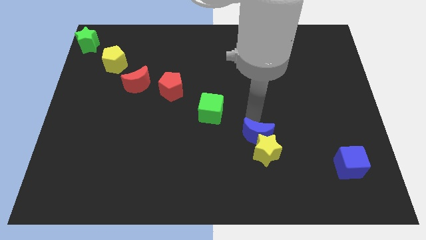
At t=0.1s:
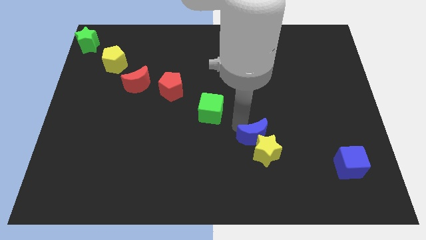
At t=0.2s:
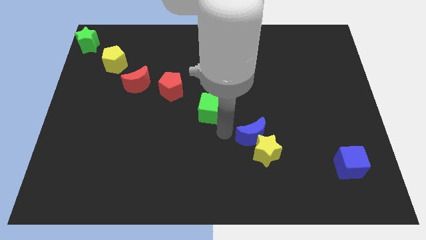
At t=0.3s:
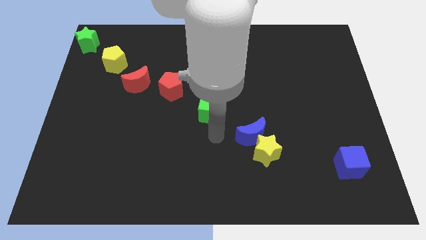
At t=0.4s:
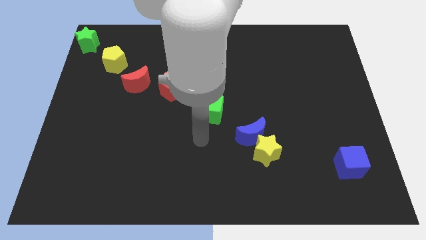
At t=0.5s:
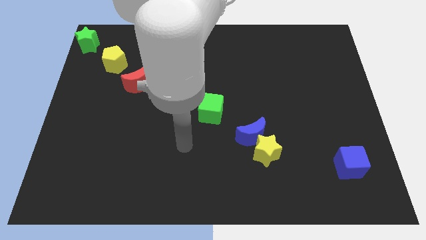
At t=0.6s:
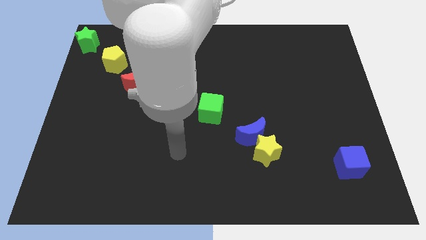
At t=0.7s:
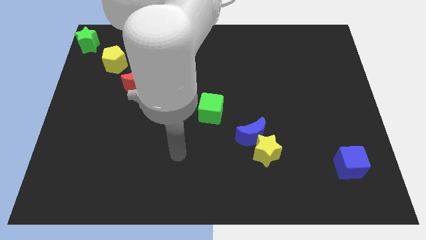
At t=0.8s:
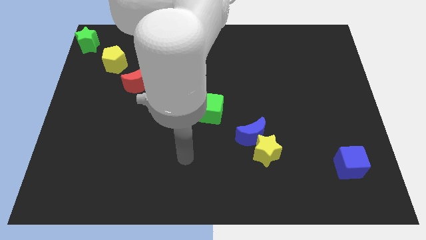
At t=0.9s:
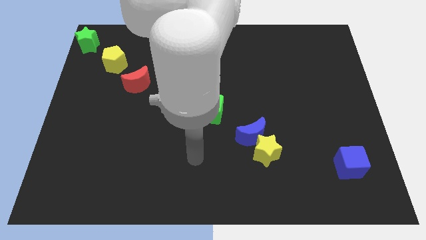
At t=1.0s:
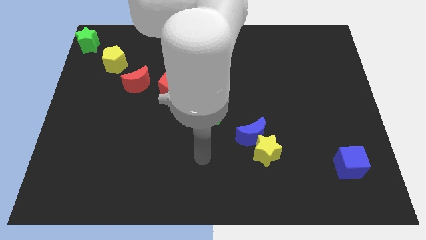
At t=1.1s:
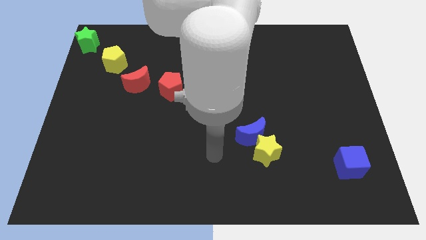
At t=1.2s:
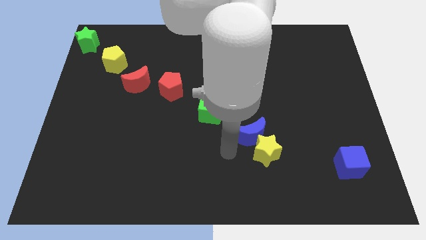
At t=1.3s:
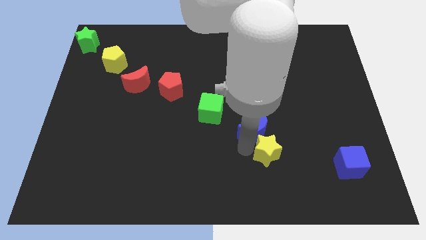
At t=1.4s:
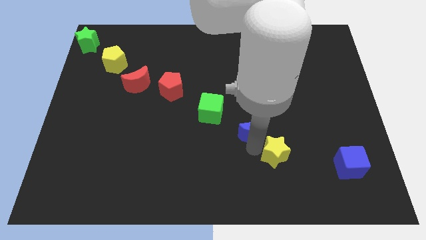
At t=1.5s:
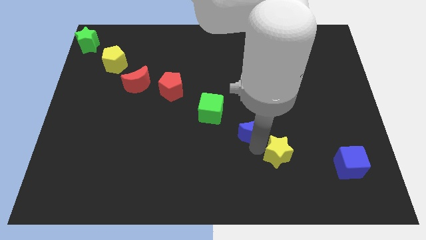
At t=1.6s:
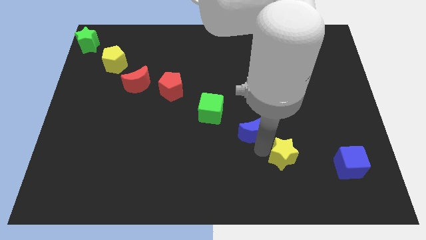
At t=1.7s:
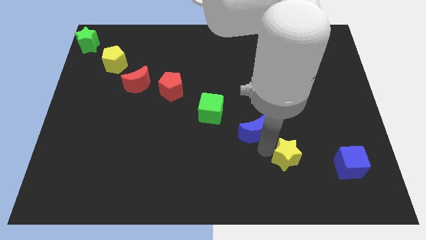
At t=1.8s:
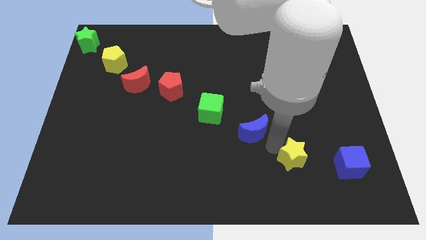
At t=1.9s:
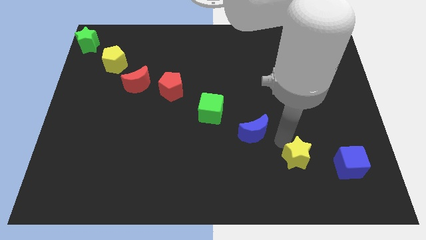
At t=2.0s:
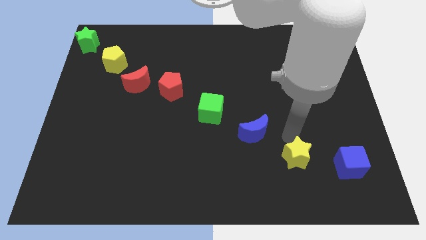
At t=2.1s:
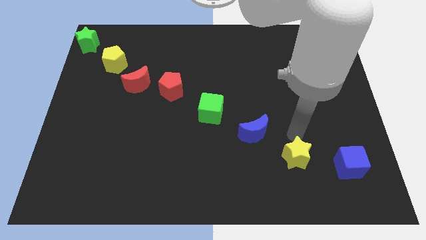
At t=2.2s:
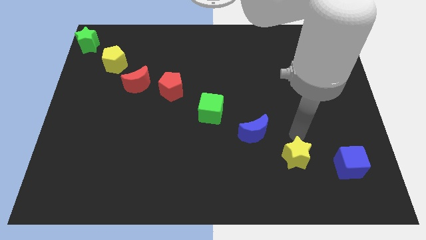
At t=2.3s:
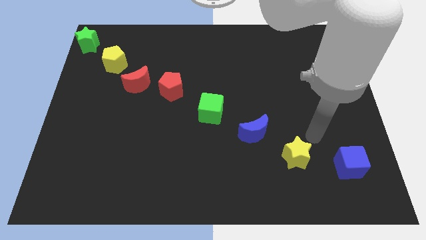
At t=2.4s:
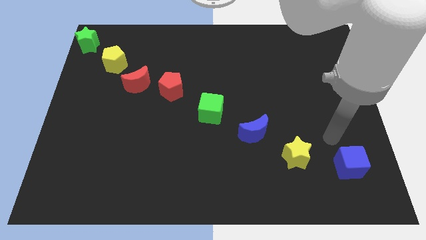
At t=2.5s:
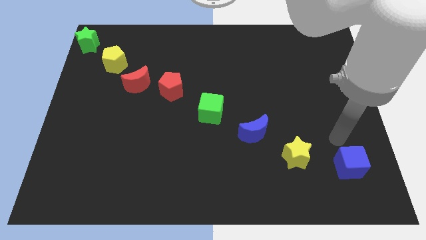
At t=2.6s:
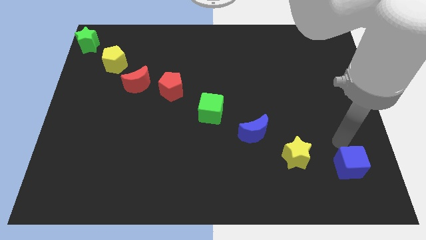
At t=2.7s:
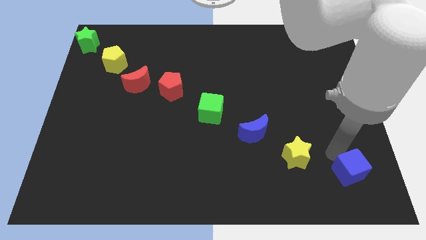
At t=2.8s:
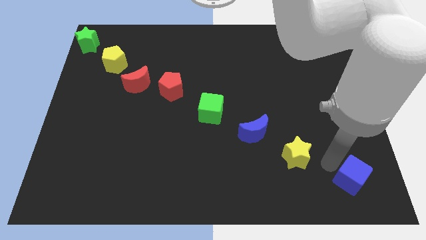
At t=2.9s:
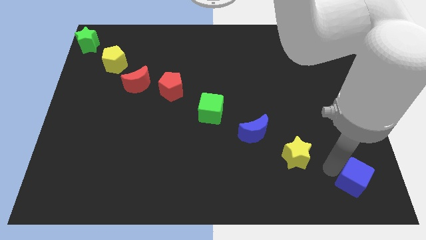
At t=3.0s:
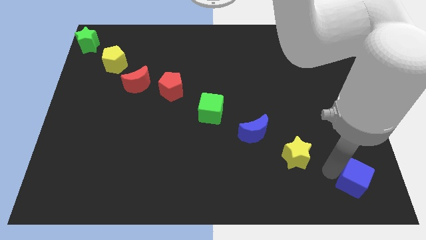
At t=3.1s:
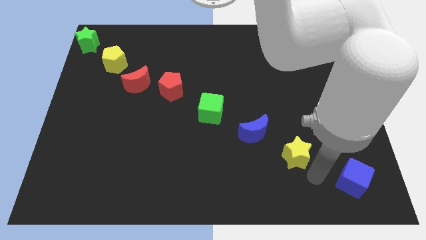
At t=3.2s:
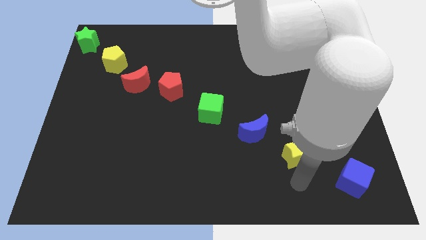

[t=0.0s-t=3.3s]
adjust blue blocks and yellow star in a diagonal line

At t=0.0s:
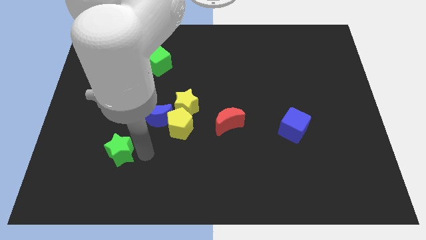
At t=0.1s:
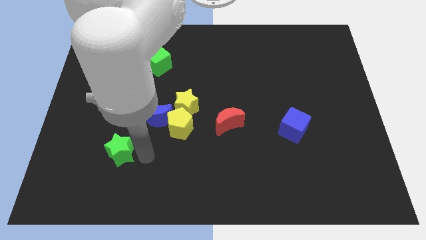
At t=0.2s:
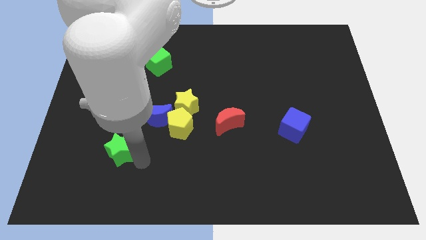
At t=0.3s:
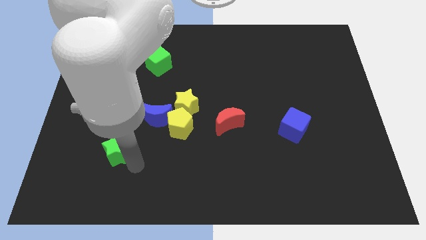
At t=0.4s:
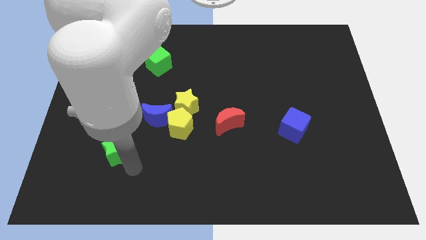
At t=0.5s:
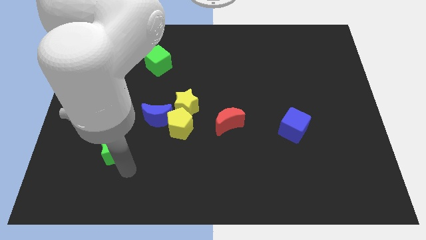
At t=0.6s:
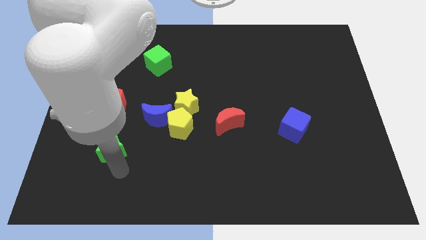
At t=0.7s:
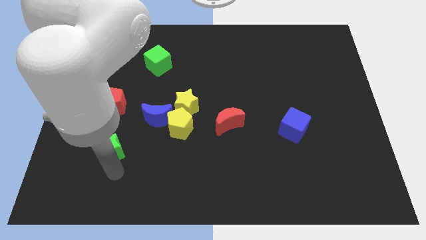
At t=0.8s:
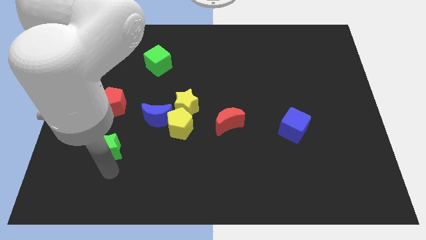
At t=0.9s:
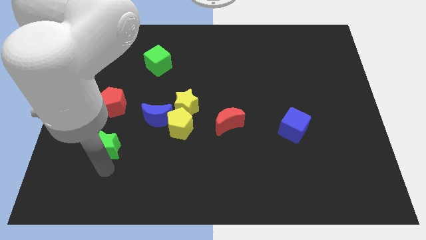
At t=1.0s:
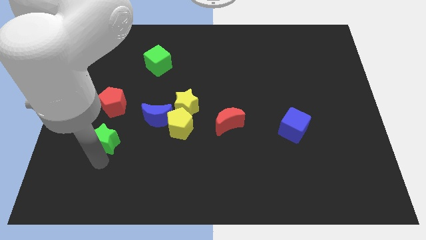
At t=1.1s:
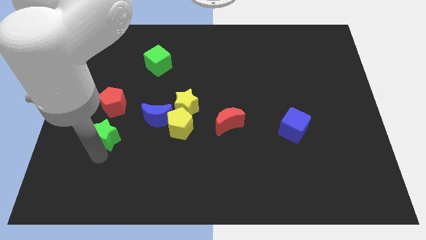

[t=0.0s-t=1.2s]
move the green star to the bottom of the red pentagon

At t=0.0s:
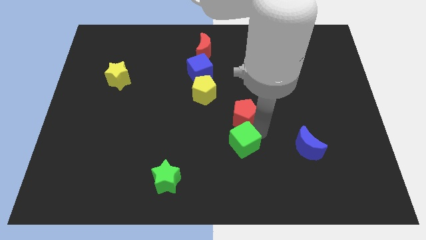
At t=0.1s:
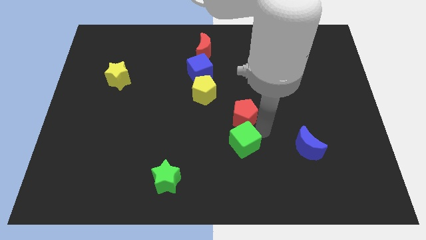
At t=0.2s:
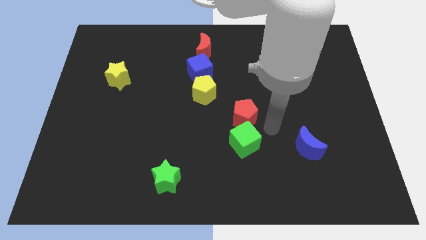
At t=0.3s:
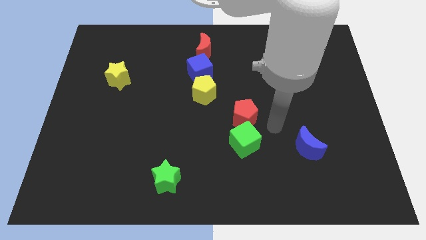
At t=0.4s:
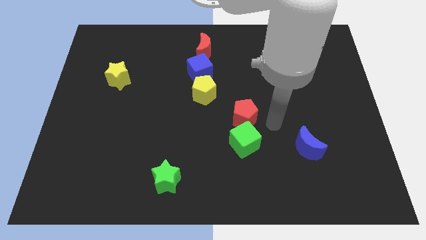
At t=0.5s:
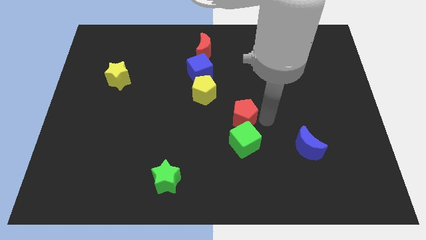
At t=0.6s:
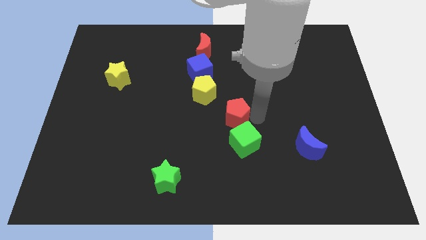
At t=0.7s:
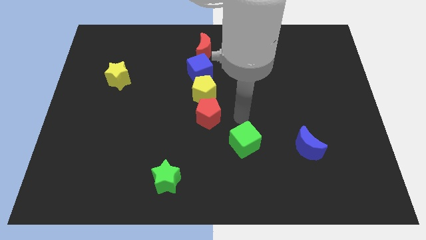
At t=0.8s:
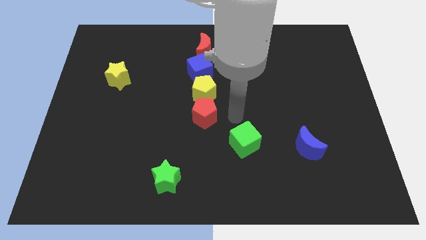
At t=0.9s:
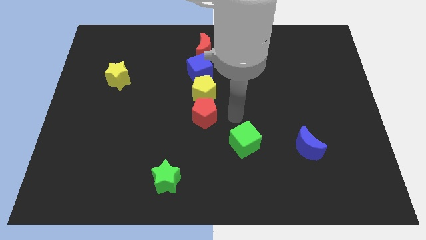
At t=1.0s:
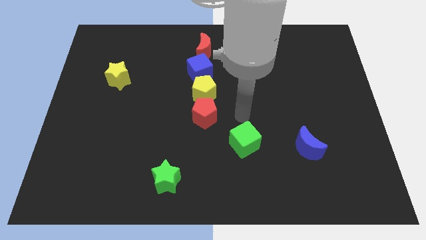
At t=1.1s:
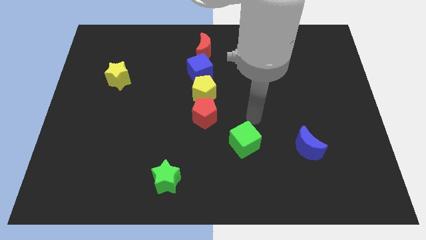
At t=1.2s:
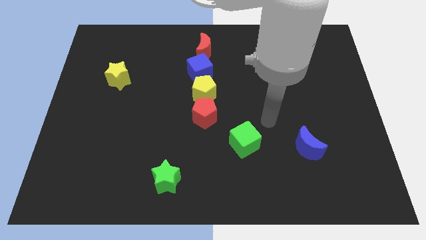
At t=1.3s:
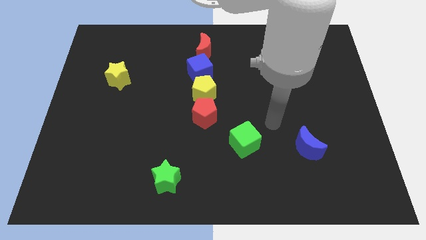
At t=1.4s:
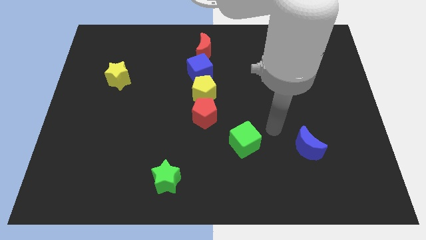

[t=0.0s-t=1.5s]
move the red pentagon to the bottom side of the yellow pentagon

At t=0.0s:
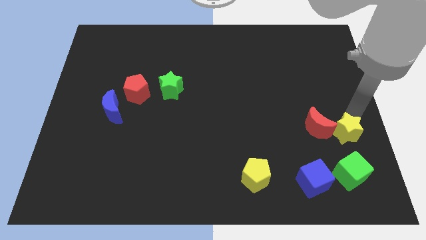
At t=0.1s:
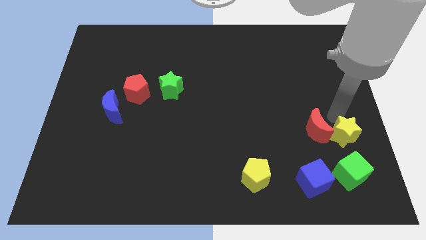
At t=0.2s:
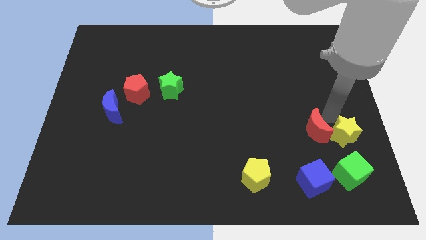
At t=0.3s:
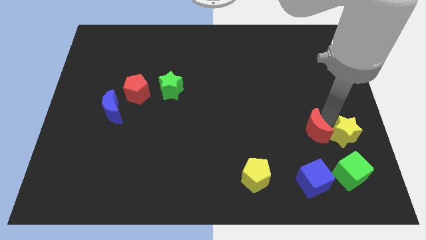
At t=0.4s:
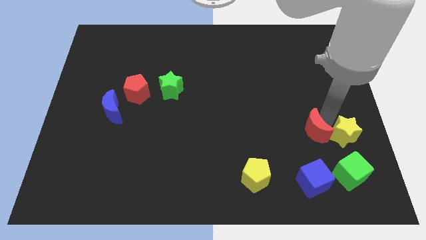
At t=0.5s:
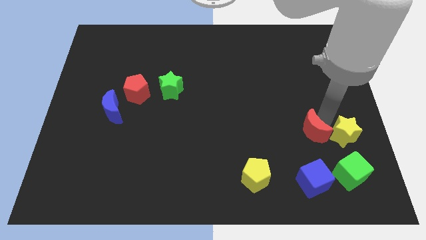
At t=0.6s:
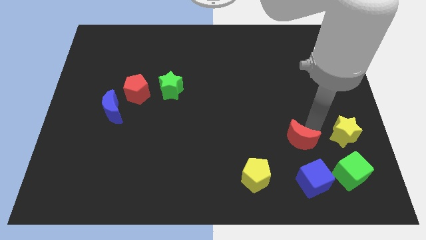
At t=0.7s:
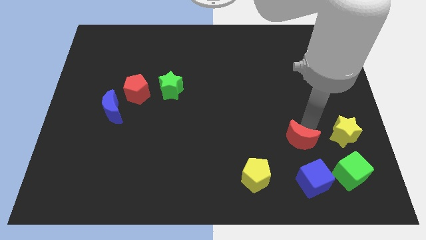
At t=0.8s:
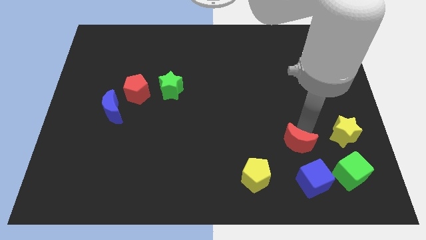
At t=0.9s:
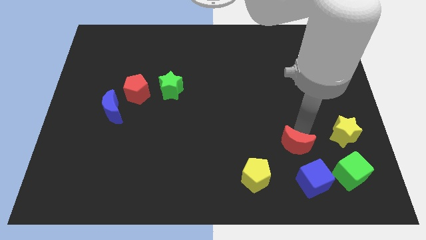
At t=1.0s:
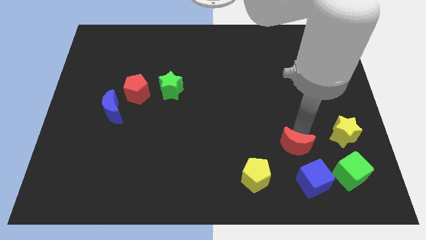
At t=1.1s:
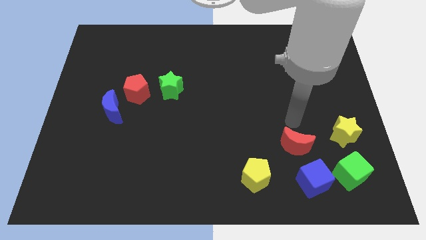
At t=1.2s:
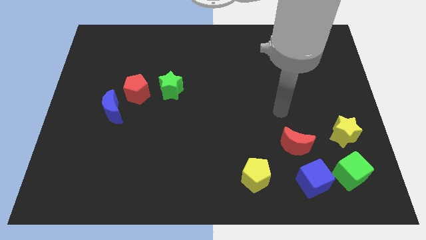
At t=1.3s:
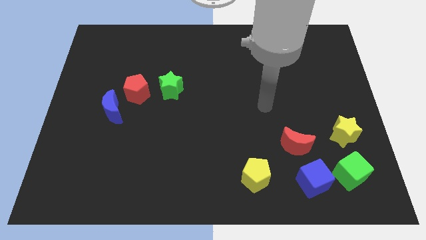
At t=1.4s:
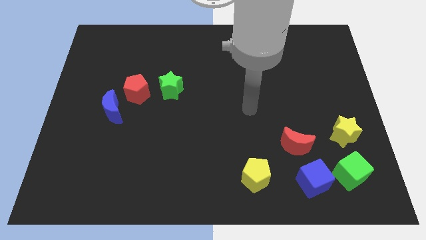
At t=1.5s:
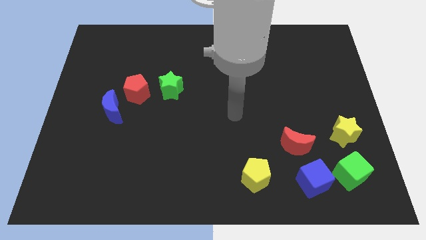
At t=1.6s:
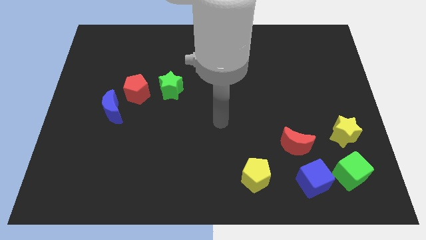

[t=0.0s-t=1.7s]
move the red crescent slightly to the left

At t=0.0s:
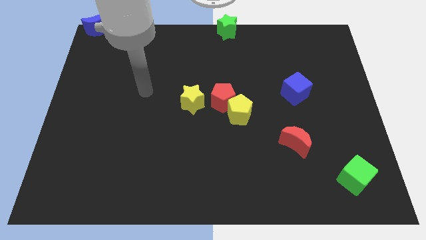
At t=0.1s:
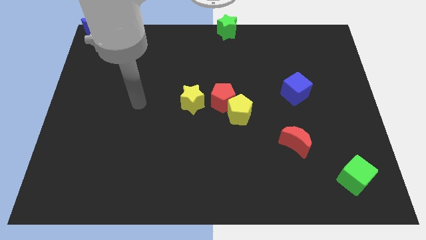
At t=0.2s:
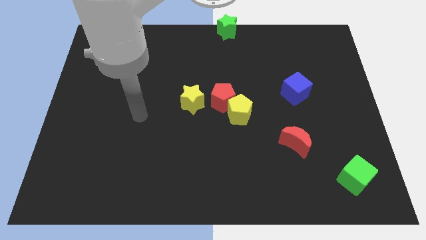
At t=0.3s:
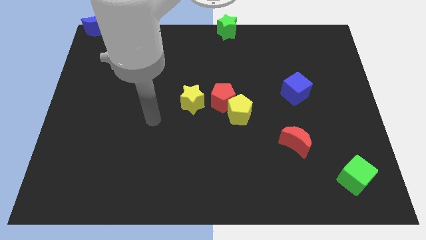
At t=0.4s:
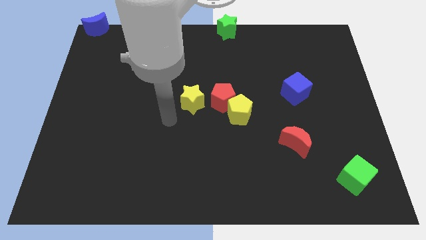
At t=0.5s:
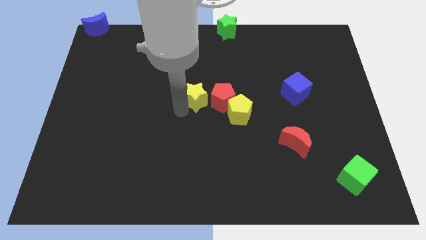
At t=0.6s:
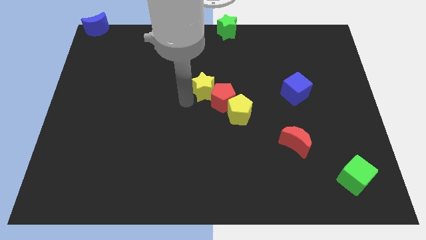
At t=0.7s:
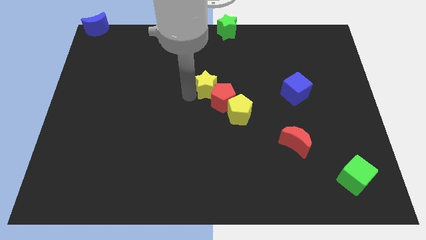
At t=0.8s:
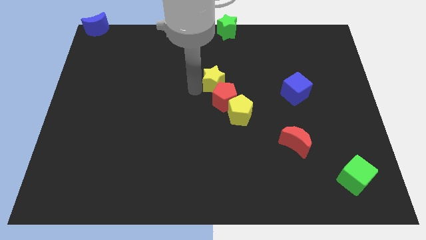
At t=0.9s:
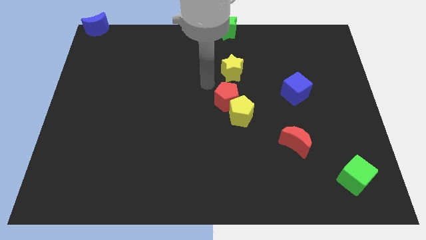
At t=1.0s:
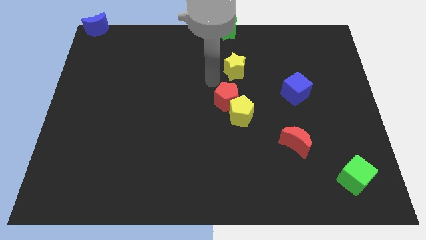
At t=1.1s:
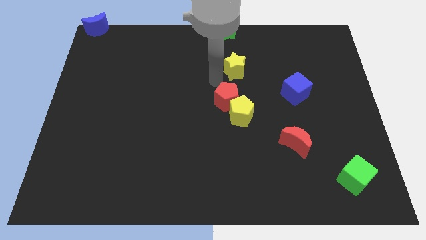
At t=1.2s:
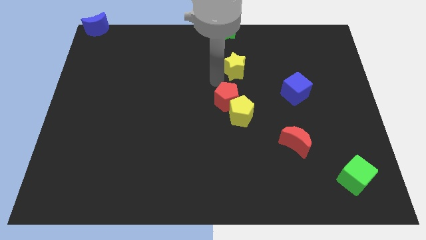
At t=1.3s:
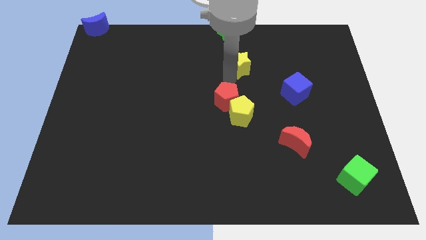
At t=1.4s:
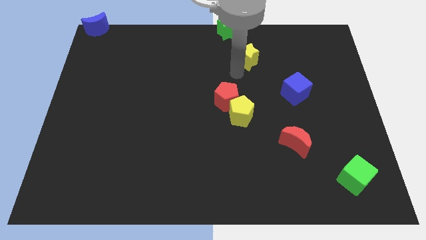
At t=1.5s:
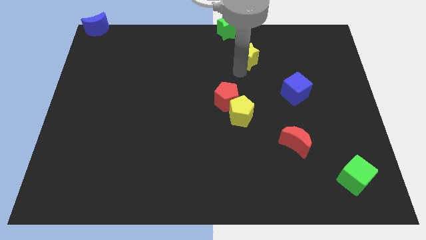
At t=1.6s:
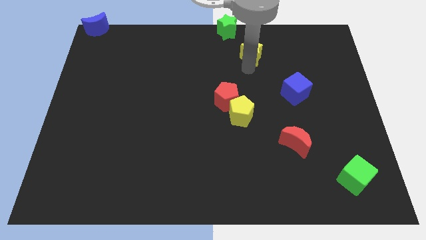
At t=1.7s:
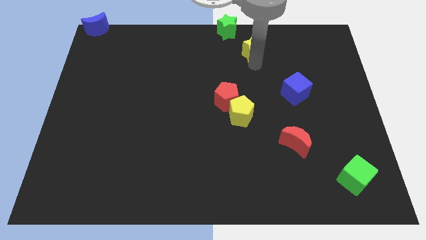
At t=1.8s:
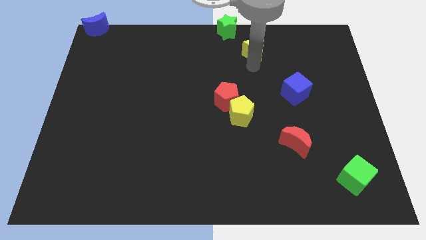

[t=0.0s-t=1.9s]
move the yellow pentagon between blue cube and green star
